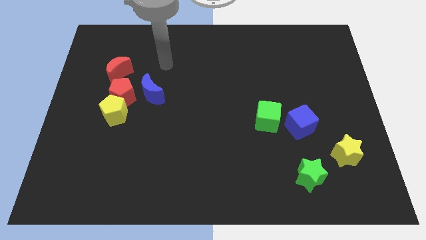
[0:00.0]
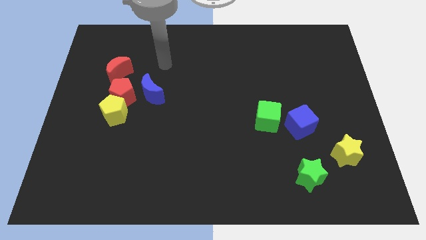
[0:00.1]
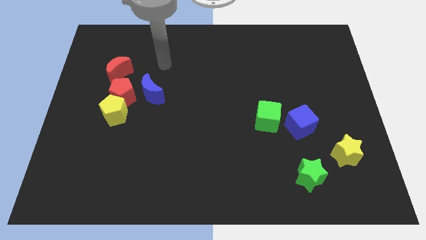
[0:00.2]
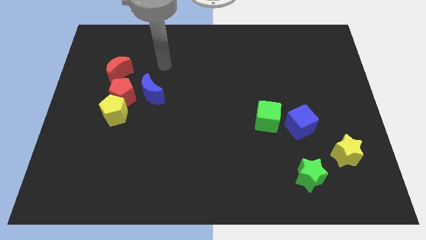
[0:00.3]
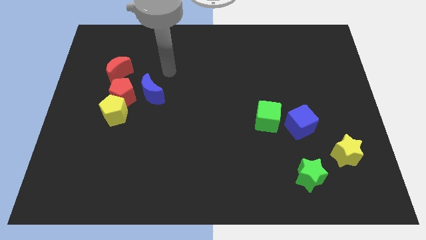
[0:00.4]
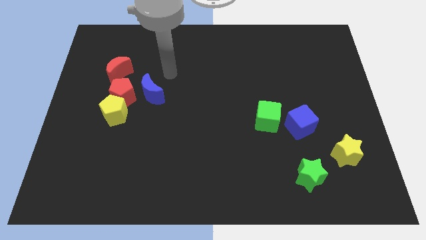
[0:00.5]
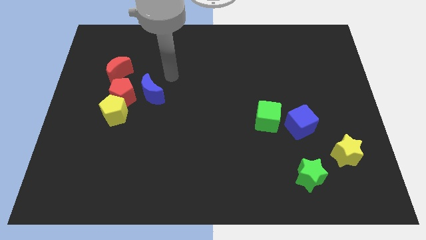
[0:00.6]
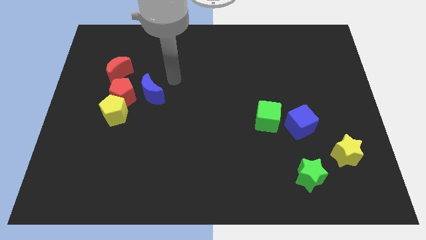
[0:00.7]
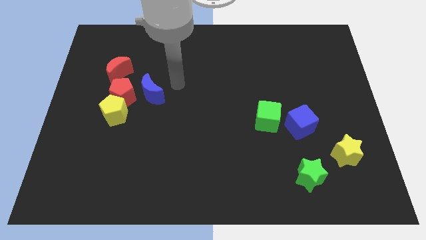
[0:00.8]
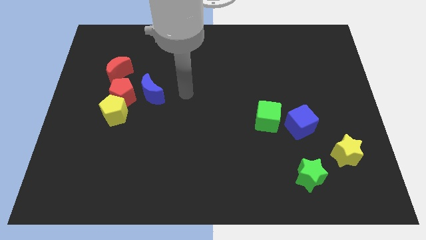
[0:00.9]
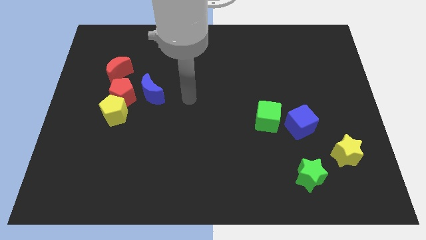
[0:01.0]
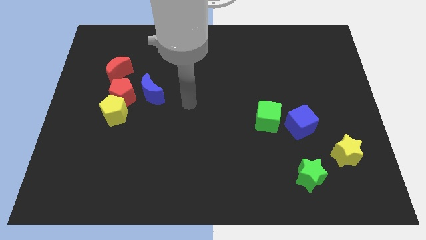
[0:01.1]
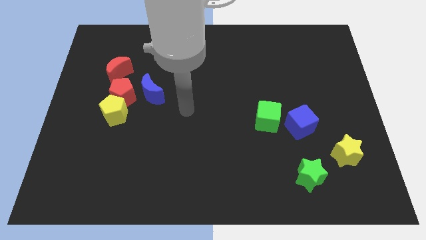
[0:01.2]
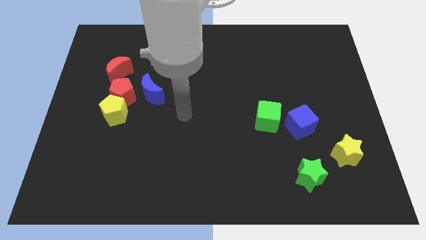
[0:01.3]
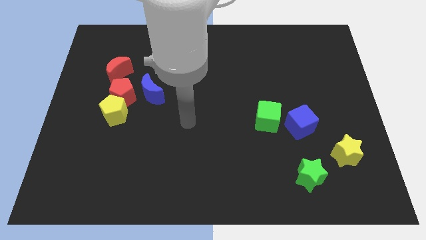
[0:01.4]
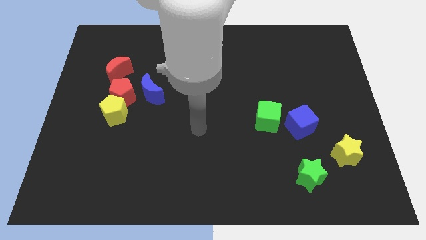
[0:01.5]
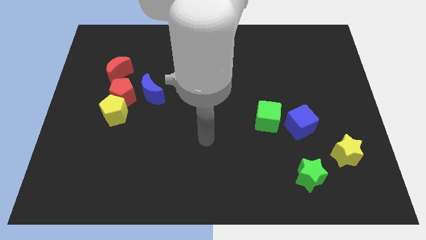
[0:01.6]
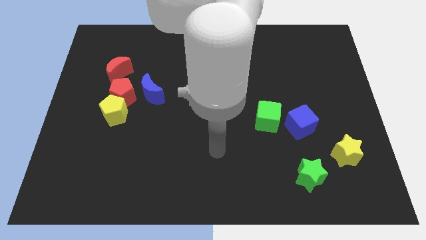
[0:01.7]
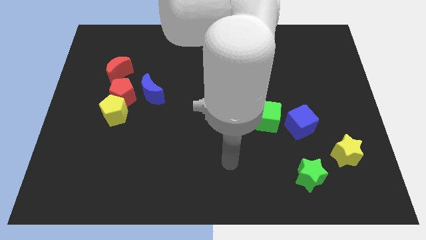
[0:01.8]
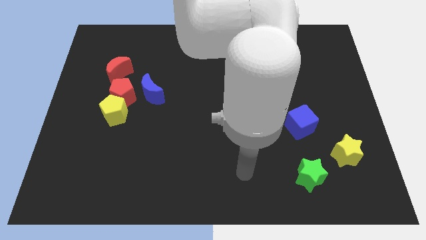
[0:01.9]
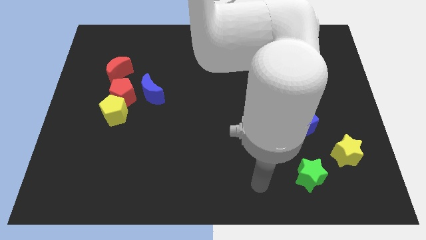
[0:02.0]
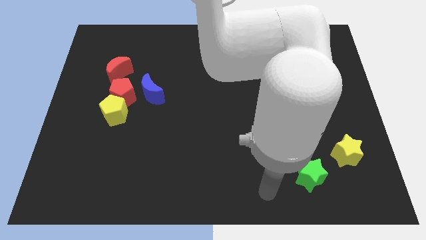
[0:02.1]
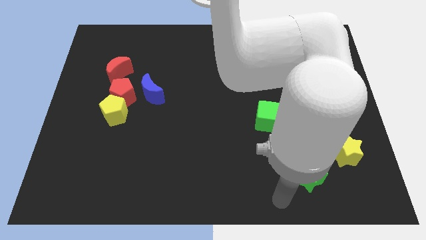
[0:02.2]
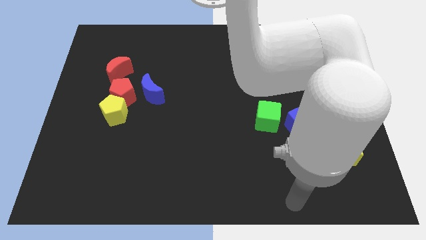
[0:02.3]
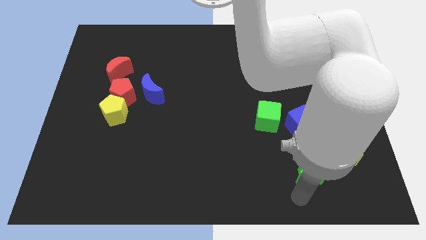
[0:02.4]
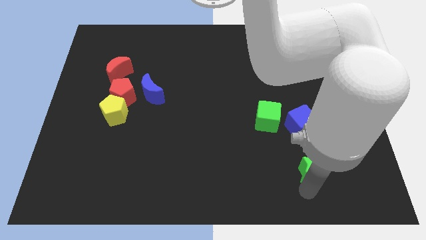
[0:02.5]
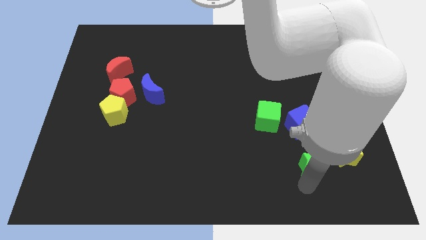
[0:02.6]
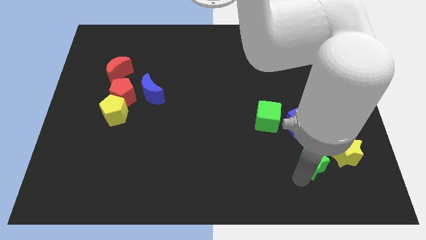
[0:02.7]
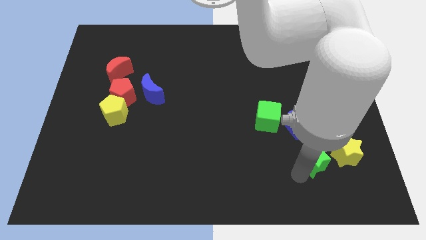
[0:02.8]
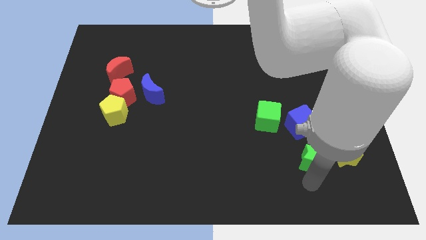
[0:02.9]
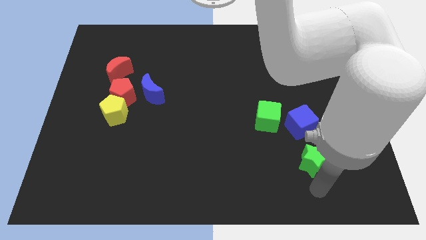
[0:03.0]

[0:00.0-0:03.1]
move arm near green star

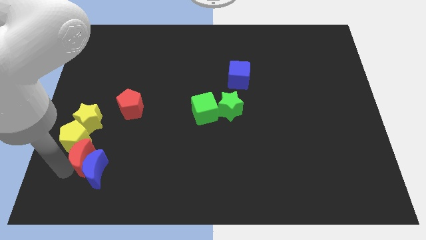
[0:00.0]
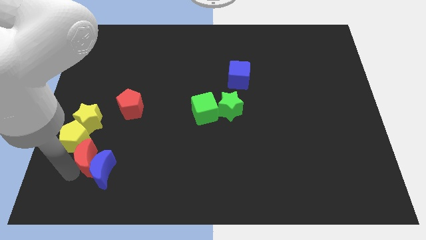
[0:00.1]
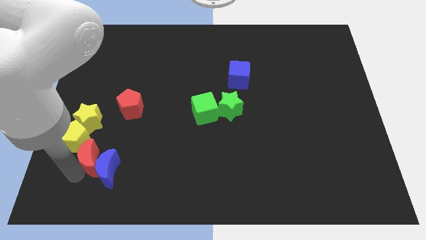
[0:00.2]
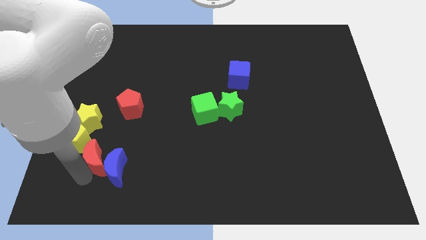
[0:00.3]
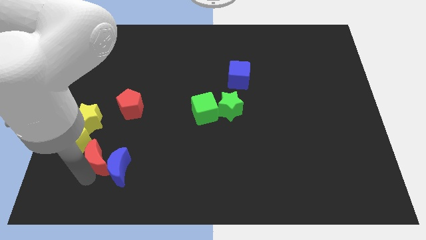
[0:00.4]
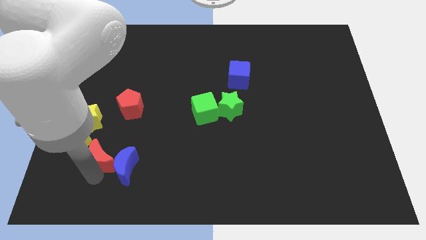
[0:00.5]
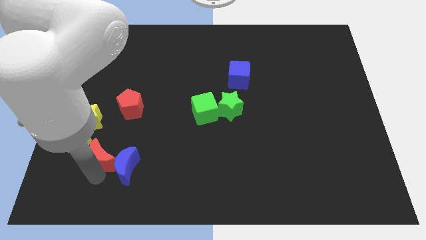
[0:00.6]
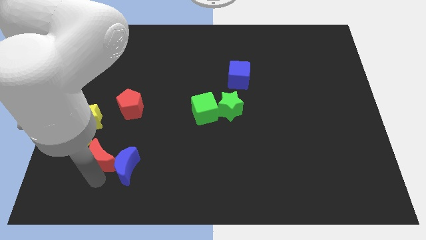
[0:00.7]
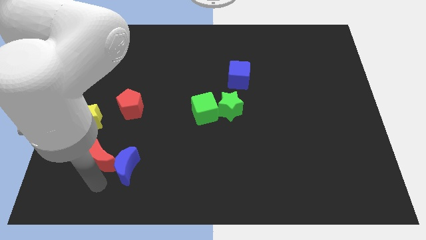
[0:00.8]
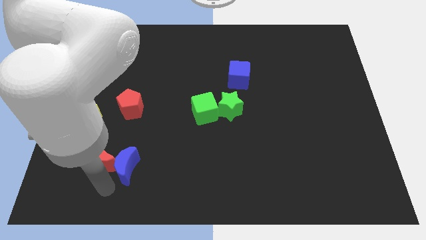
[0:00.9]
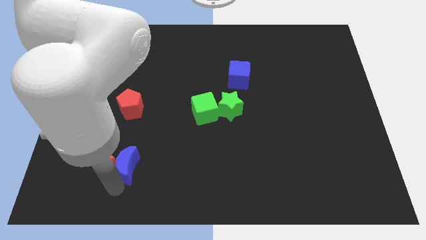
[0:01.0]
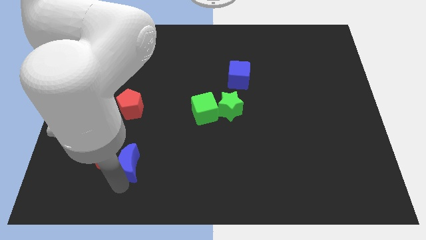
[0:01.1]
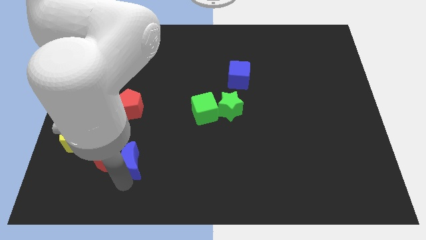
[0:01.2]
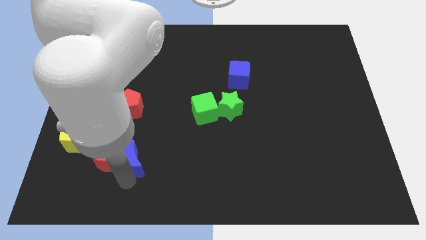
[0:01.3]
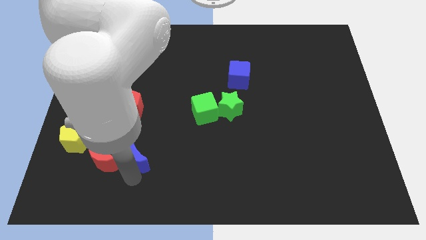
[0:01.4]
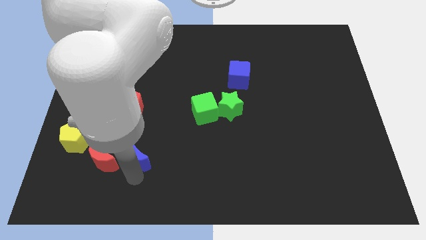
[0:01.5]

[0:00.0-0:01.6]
slightly push the blue crescent away from the red crescent

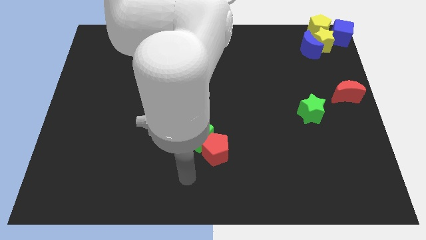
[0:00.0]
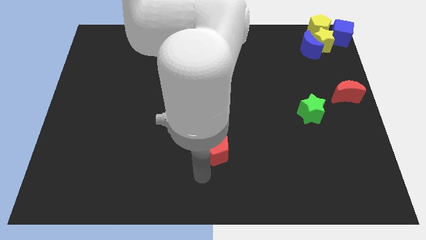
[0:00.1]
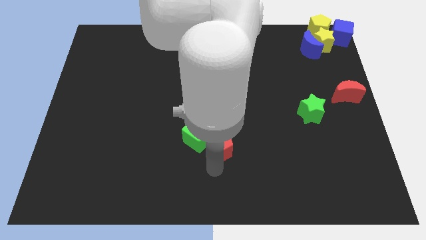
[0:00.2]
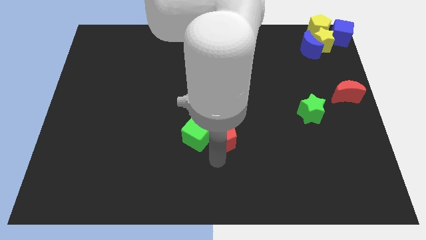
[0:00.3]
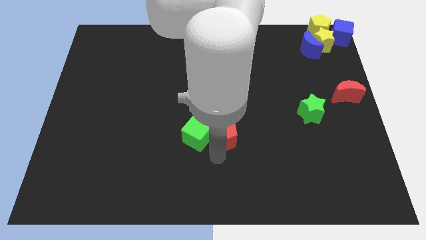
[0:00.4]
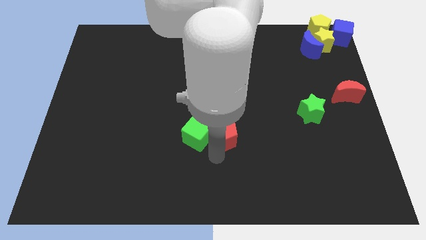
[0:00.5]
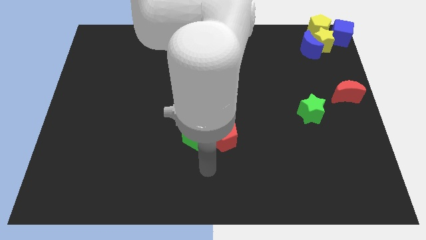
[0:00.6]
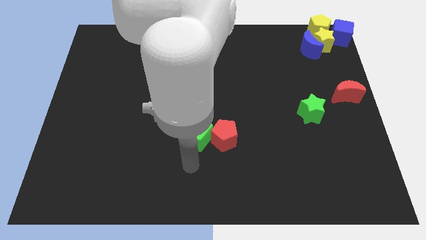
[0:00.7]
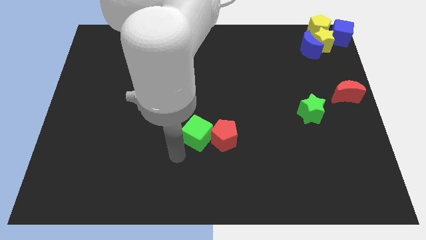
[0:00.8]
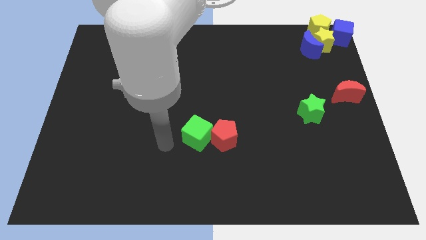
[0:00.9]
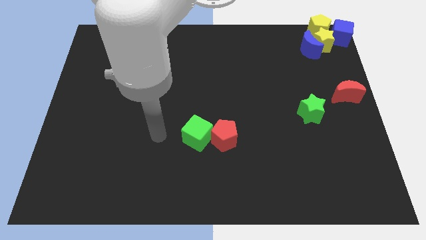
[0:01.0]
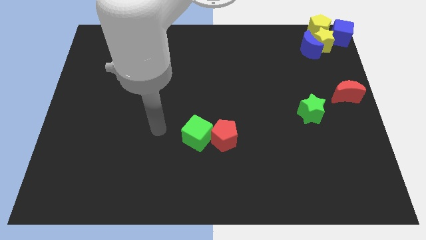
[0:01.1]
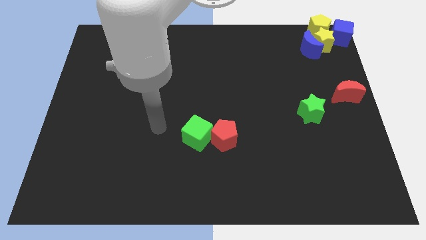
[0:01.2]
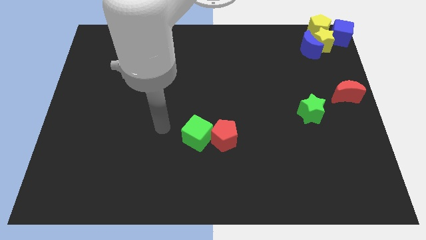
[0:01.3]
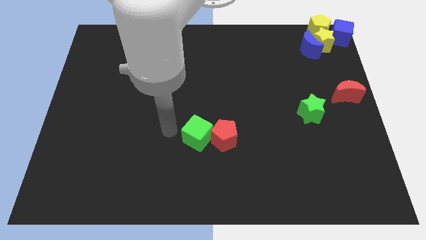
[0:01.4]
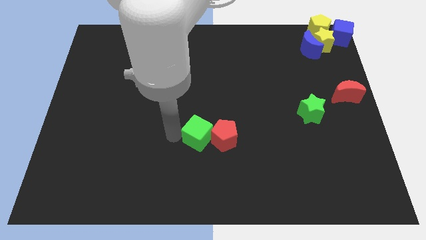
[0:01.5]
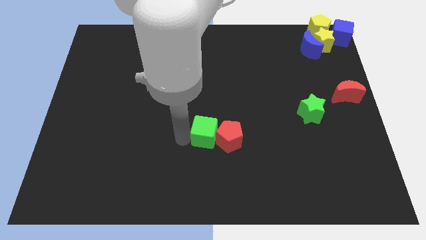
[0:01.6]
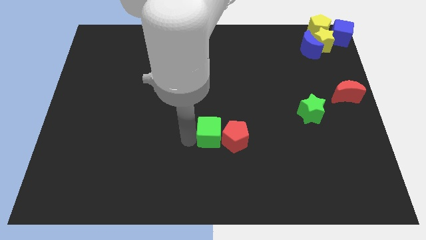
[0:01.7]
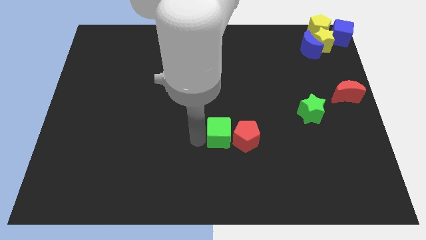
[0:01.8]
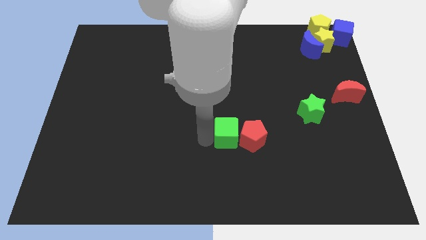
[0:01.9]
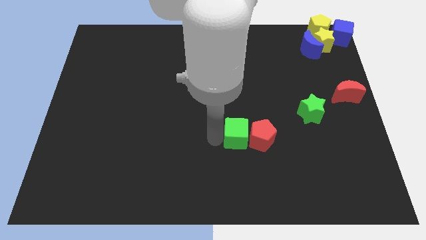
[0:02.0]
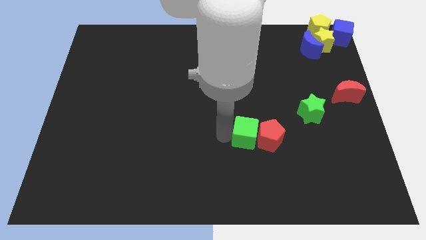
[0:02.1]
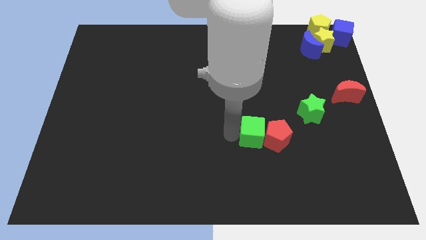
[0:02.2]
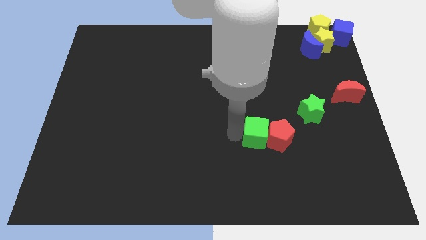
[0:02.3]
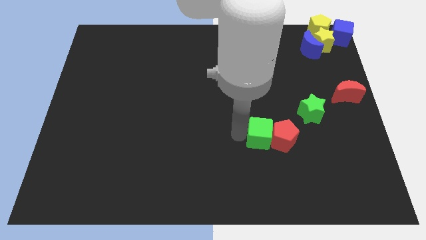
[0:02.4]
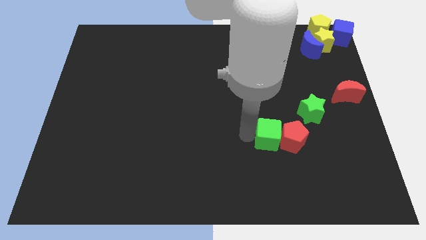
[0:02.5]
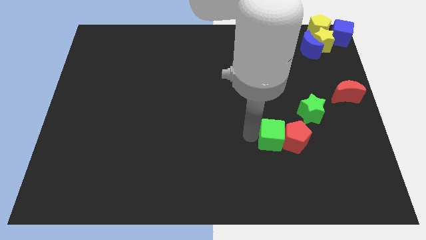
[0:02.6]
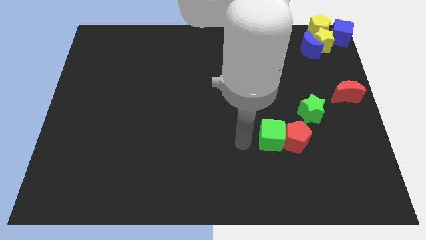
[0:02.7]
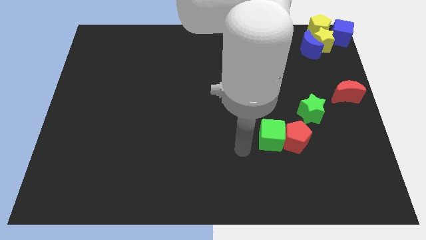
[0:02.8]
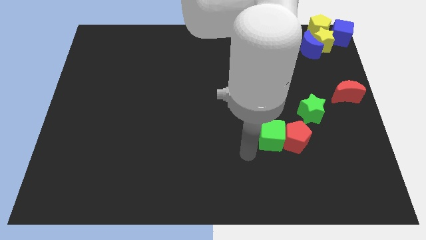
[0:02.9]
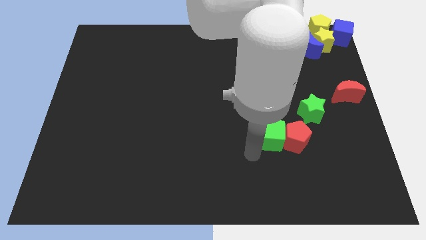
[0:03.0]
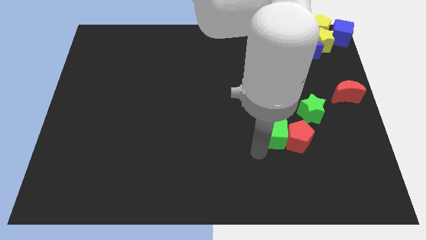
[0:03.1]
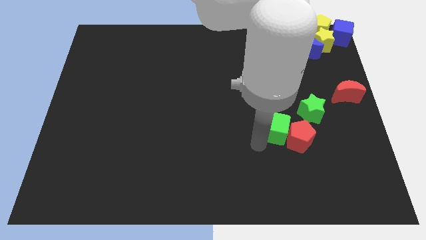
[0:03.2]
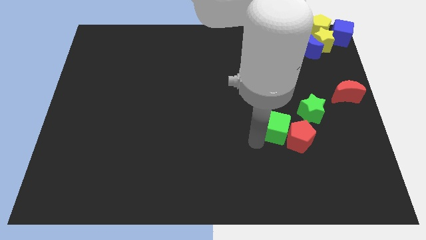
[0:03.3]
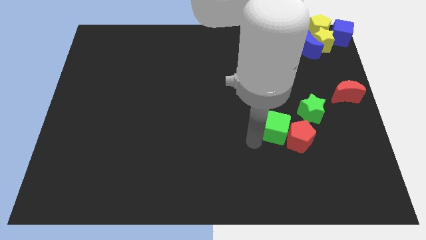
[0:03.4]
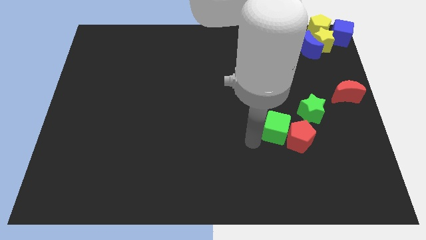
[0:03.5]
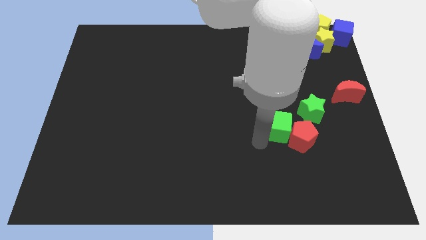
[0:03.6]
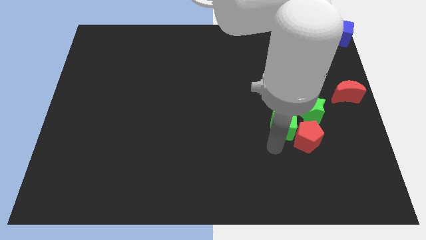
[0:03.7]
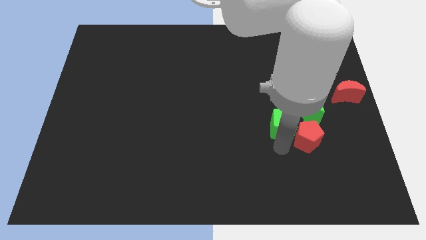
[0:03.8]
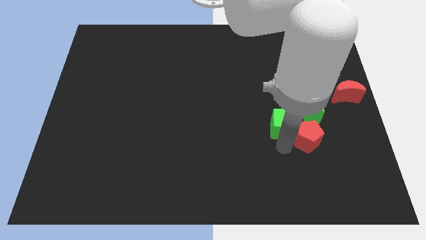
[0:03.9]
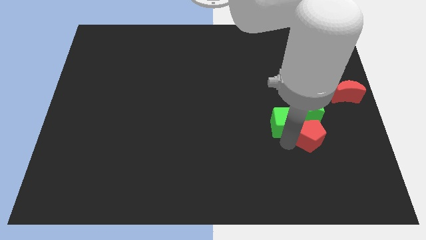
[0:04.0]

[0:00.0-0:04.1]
move the green cube and red pentagon near green star

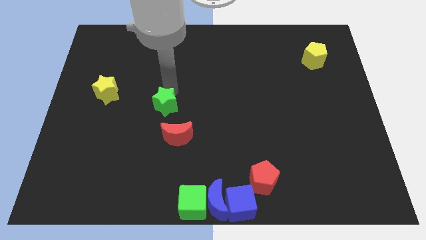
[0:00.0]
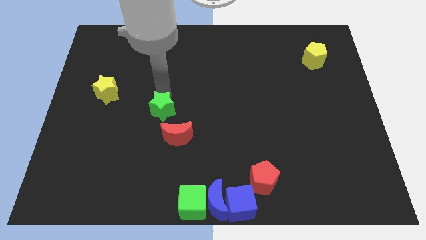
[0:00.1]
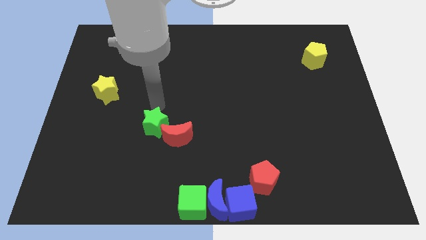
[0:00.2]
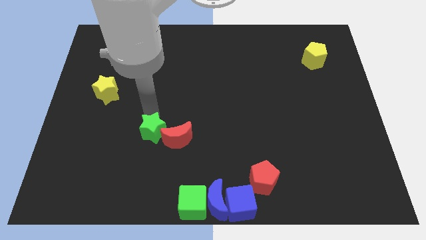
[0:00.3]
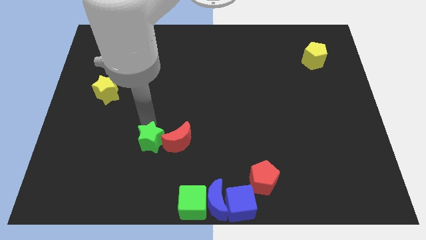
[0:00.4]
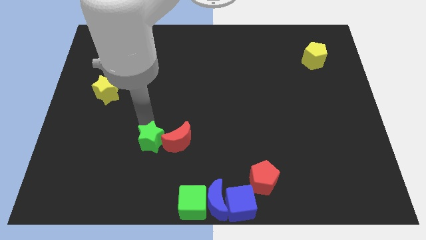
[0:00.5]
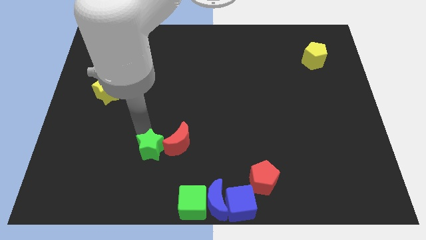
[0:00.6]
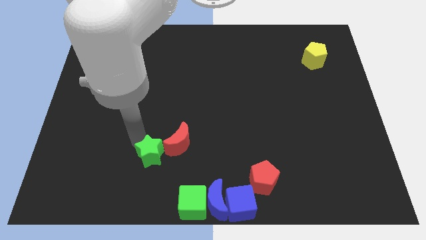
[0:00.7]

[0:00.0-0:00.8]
push the green star to the left of the red crescent
